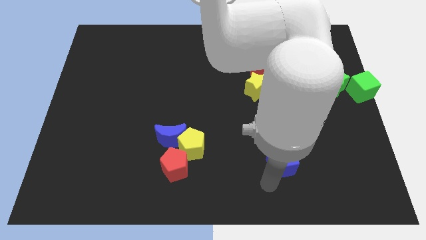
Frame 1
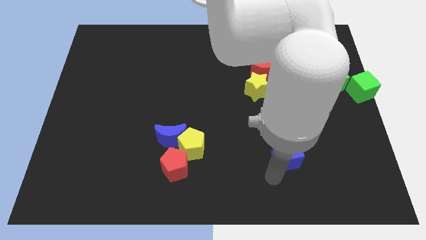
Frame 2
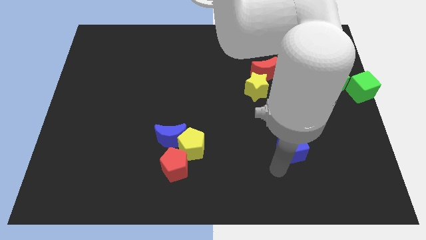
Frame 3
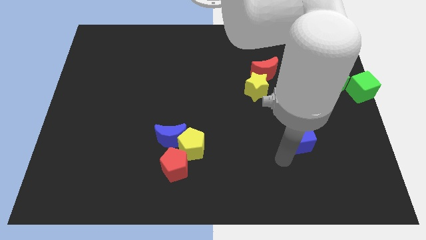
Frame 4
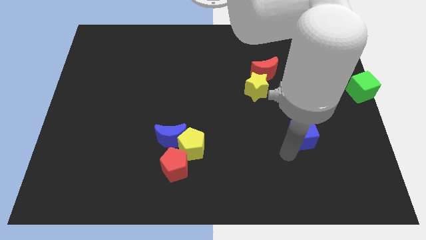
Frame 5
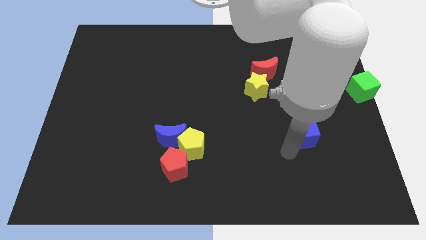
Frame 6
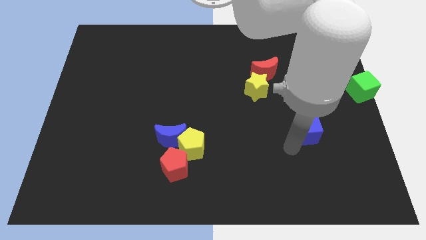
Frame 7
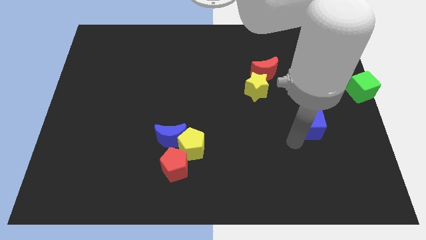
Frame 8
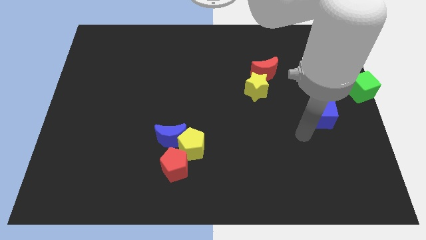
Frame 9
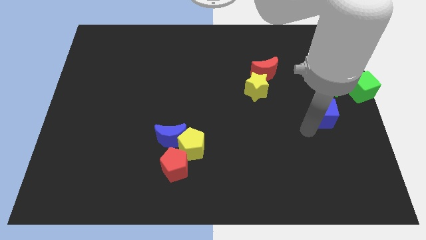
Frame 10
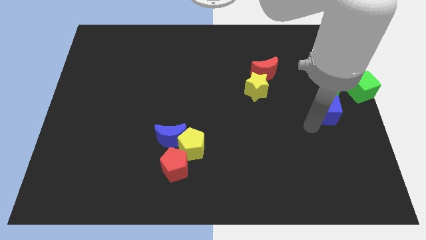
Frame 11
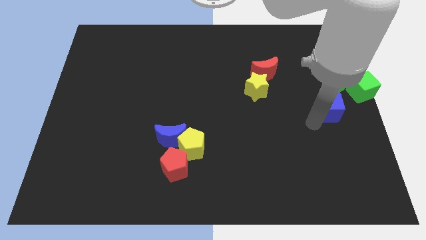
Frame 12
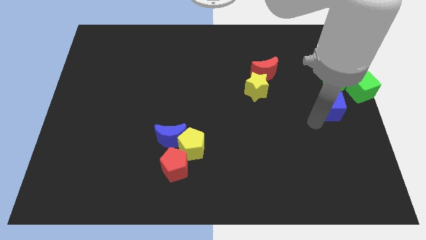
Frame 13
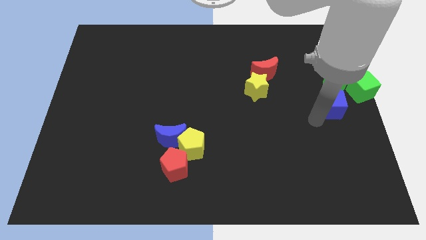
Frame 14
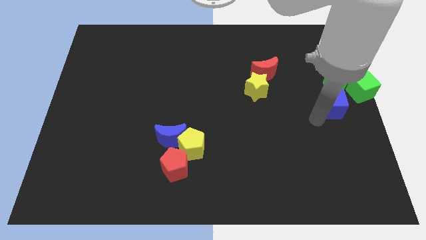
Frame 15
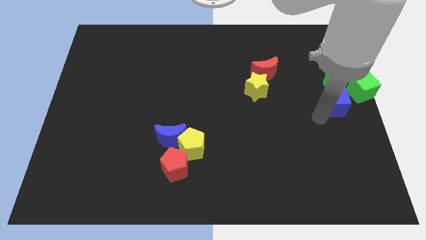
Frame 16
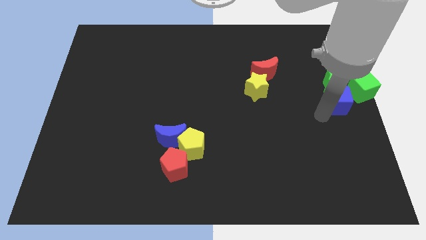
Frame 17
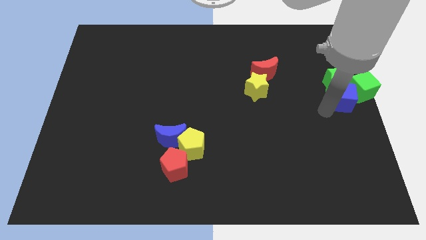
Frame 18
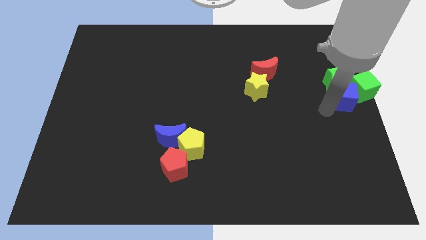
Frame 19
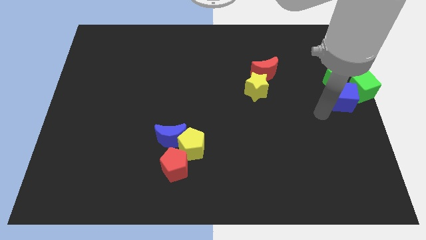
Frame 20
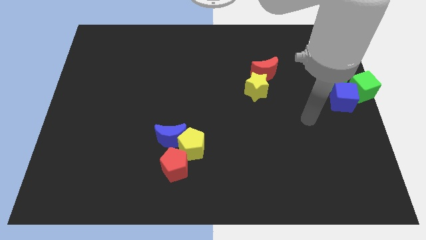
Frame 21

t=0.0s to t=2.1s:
push the blue cube left to the green cube

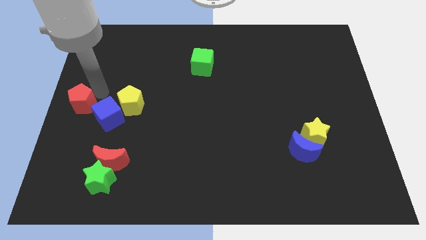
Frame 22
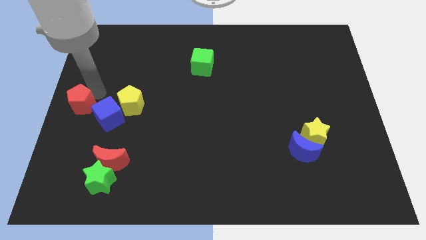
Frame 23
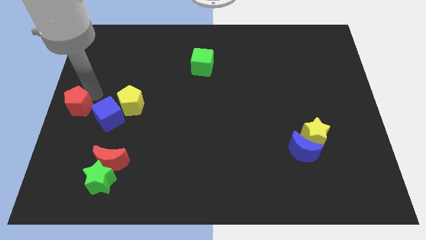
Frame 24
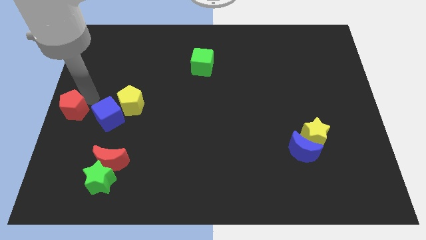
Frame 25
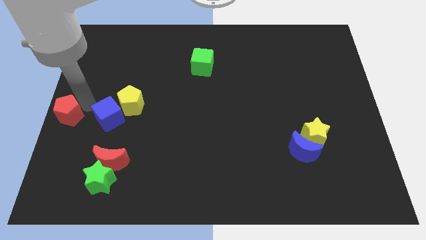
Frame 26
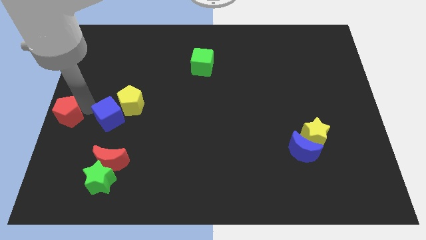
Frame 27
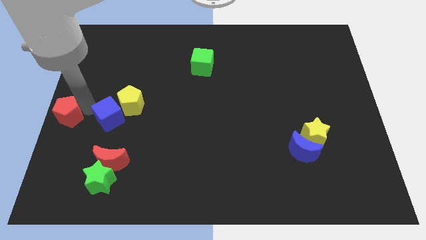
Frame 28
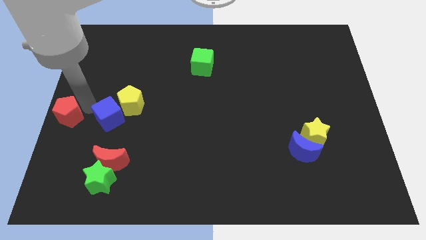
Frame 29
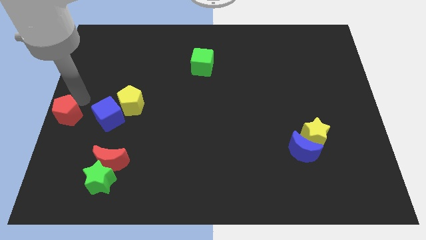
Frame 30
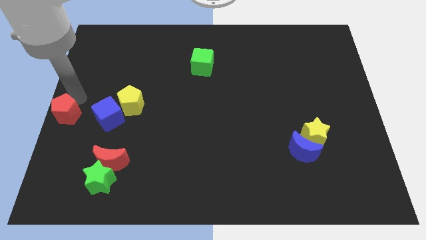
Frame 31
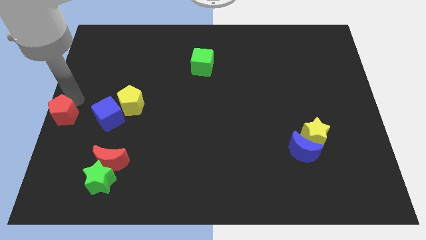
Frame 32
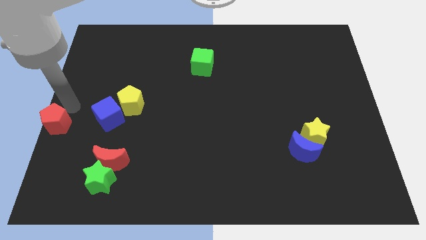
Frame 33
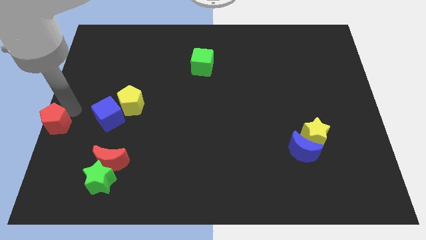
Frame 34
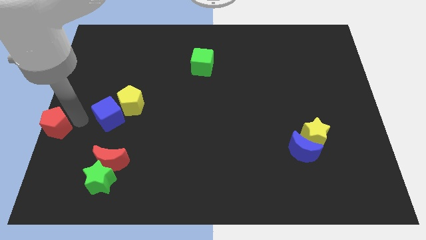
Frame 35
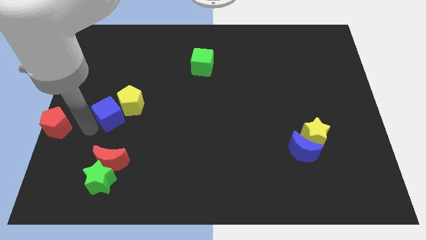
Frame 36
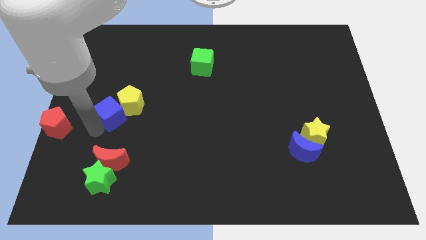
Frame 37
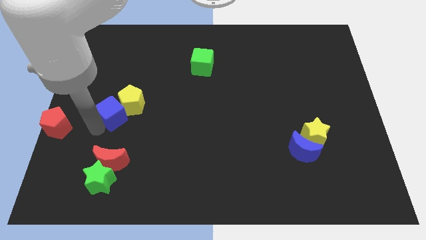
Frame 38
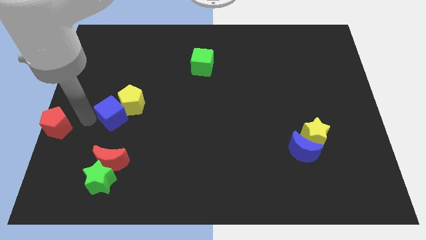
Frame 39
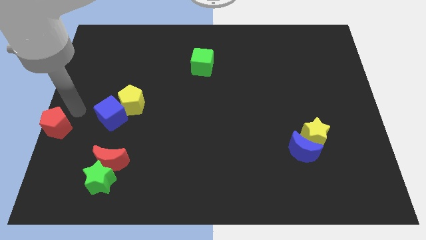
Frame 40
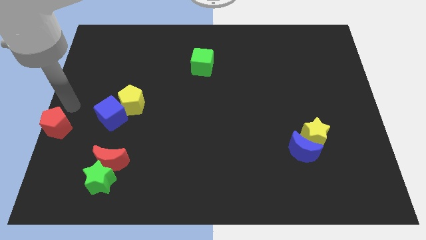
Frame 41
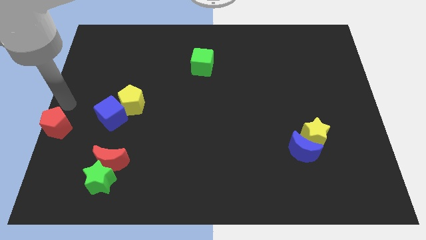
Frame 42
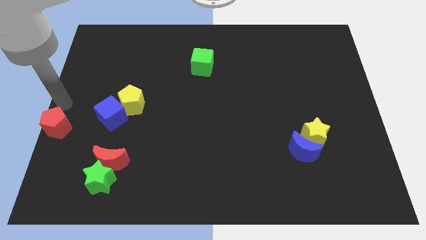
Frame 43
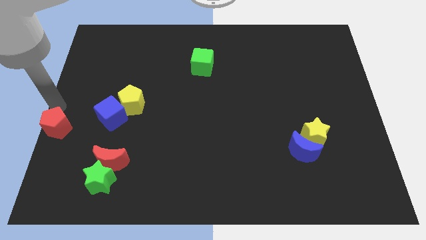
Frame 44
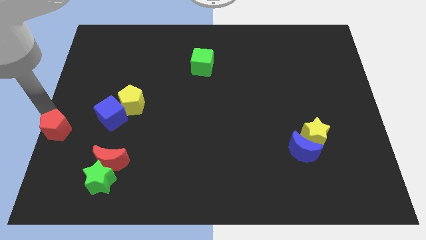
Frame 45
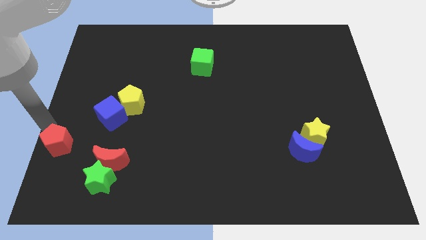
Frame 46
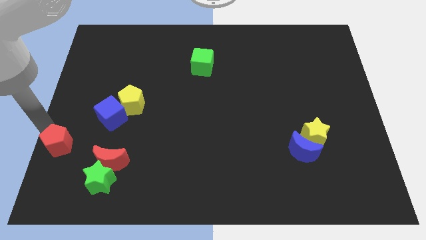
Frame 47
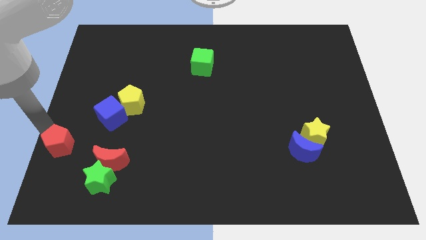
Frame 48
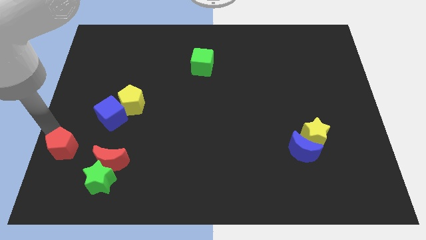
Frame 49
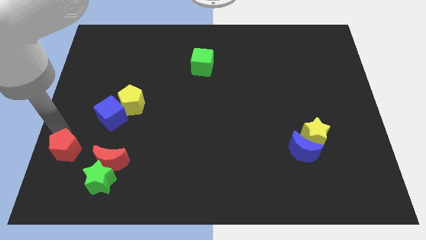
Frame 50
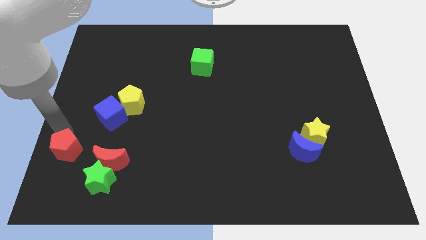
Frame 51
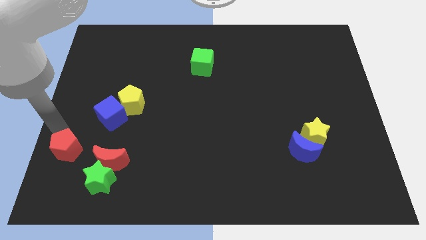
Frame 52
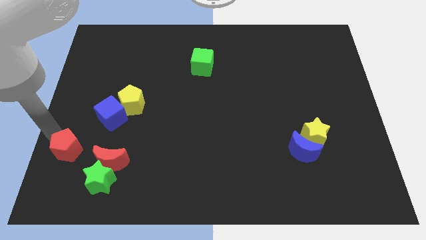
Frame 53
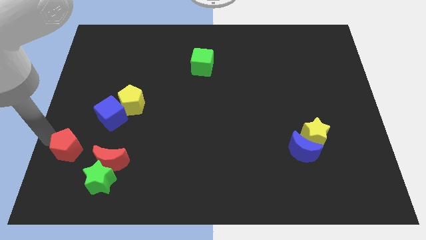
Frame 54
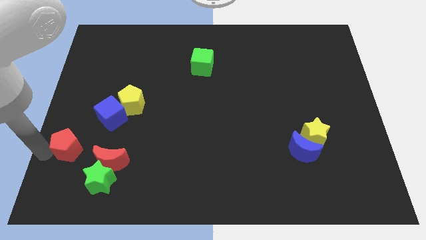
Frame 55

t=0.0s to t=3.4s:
push the red pentagon diagonal to the red moon

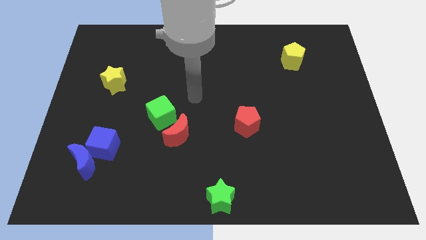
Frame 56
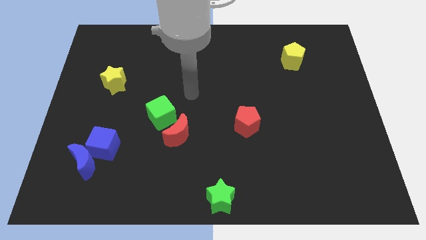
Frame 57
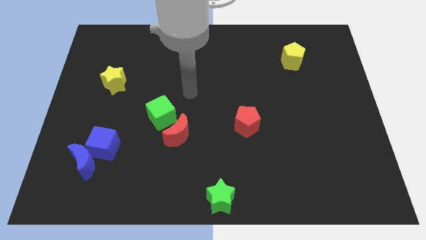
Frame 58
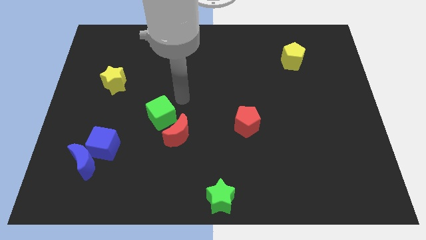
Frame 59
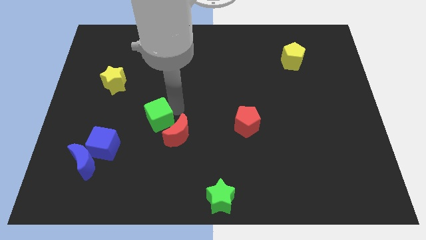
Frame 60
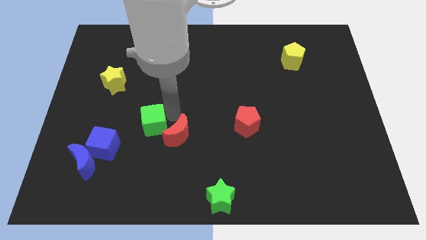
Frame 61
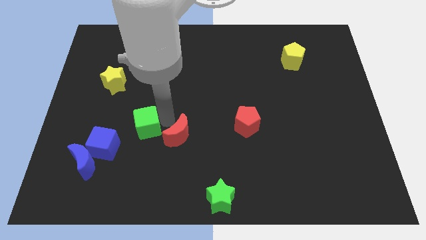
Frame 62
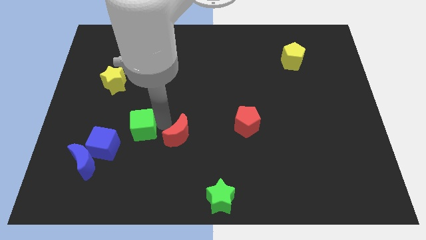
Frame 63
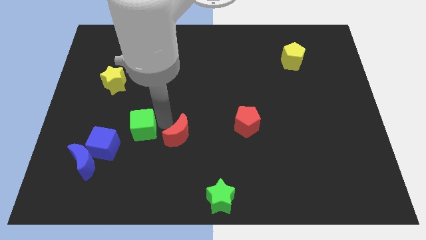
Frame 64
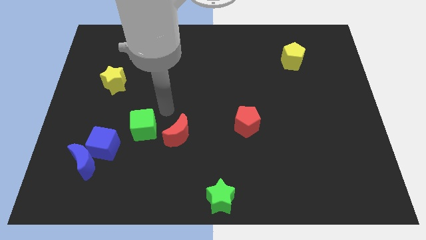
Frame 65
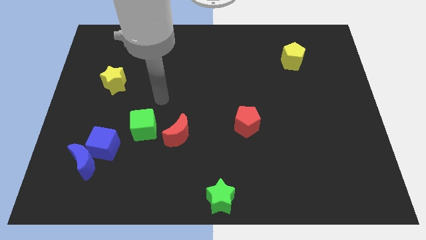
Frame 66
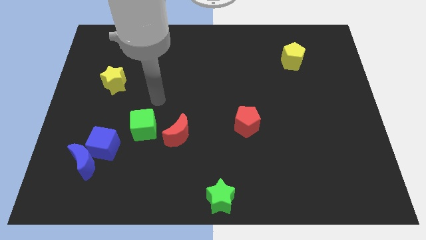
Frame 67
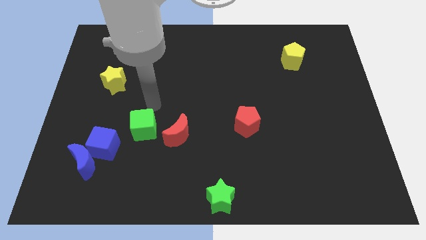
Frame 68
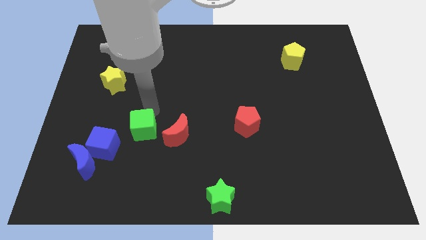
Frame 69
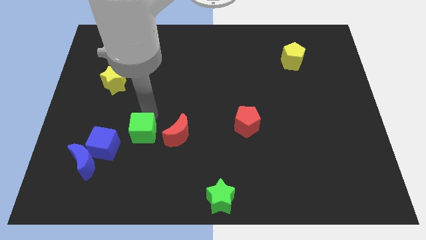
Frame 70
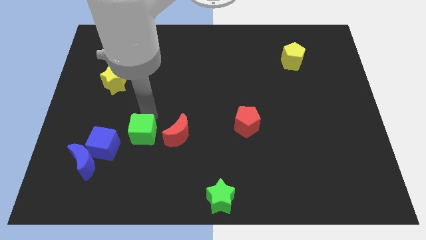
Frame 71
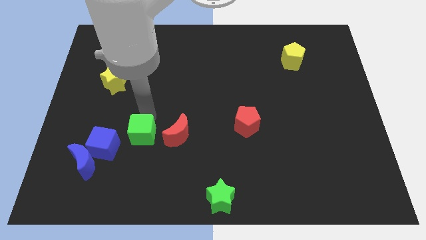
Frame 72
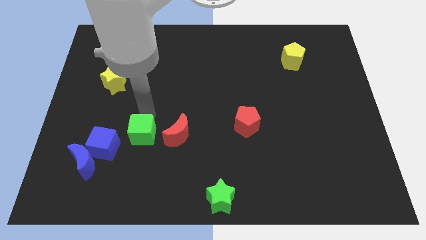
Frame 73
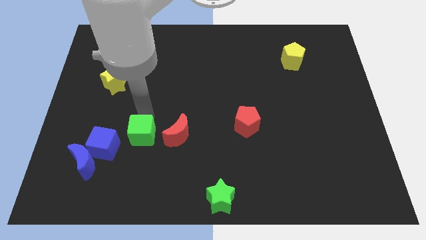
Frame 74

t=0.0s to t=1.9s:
place the green cube in between the red moon and the blue cube

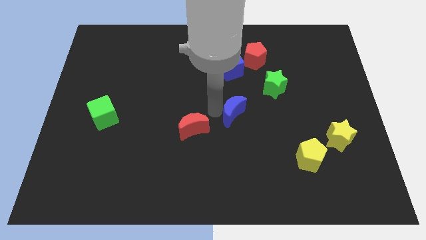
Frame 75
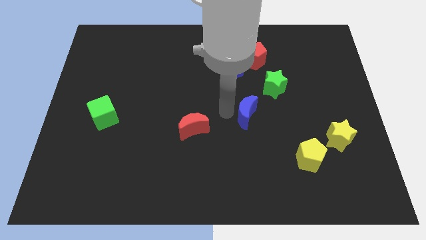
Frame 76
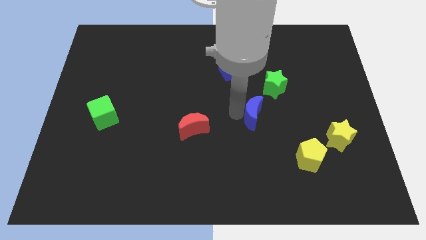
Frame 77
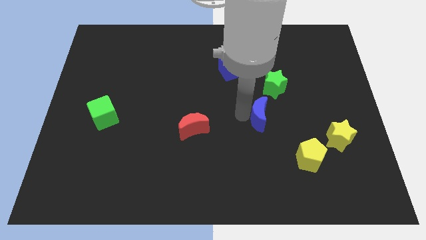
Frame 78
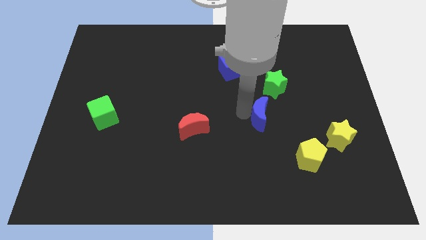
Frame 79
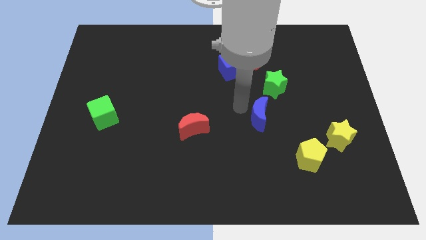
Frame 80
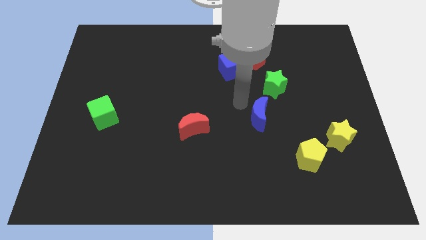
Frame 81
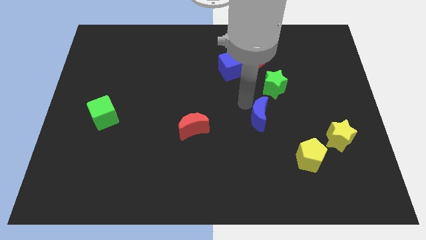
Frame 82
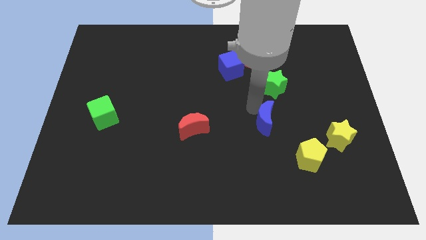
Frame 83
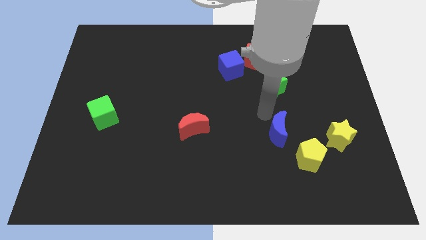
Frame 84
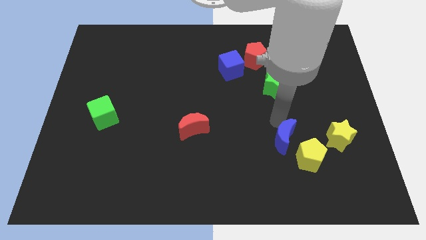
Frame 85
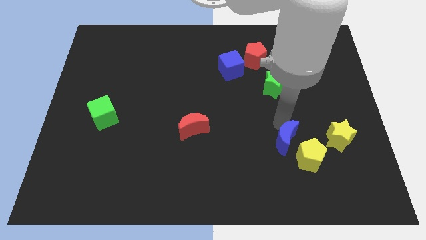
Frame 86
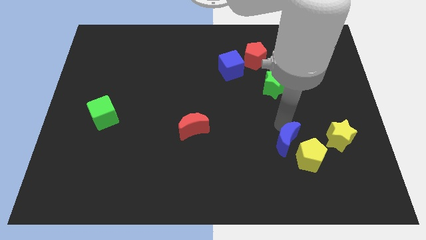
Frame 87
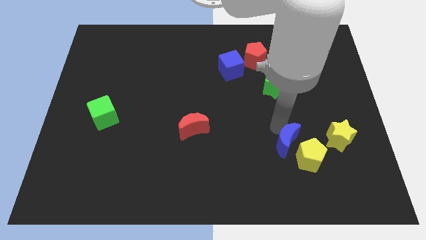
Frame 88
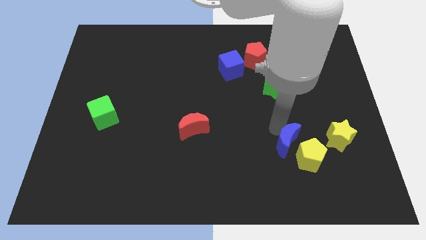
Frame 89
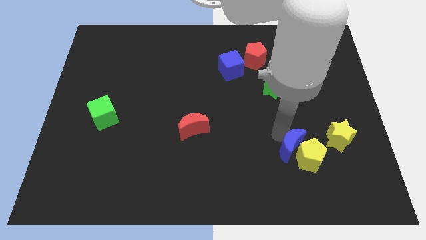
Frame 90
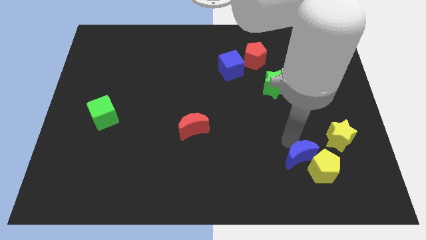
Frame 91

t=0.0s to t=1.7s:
drag the blue crescent into the left side of the yellow pentagon
